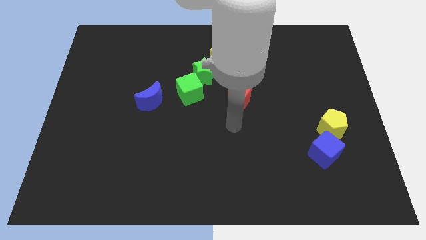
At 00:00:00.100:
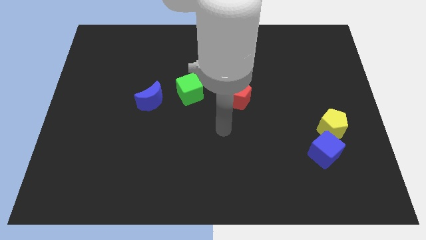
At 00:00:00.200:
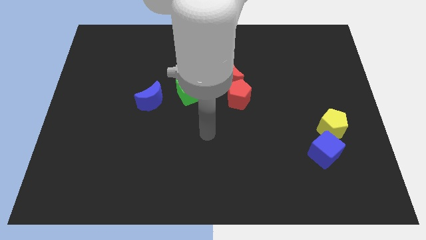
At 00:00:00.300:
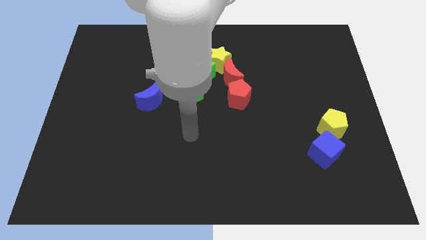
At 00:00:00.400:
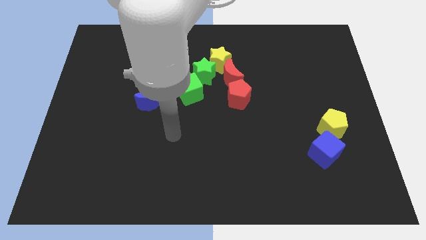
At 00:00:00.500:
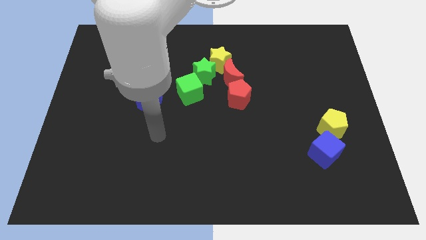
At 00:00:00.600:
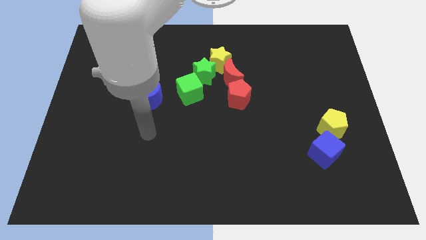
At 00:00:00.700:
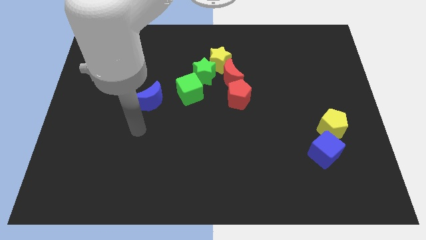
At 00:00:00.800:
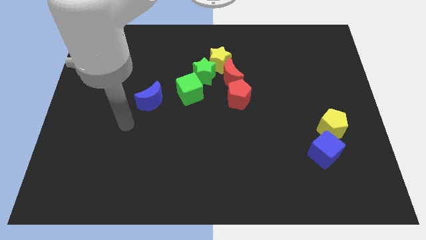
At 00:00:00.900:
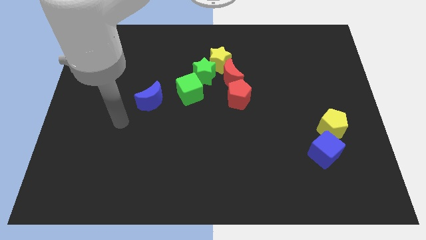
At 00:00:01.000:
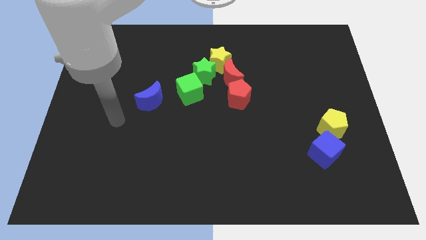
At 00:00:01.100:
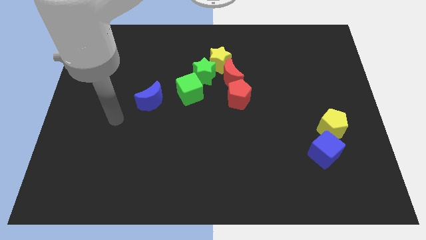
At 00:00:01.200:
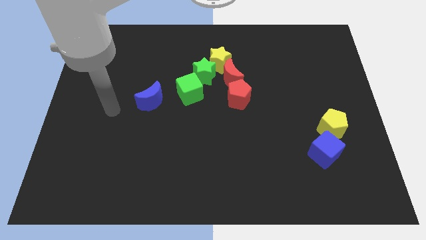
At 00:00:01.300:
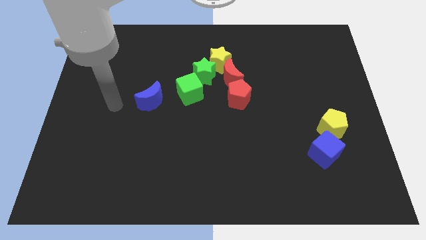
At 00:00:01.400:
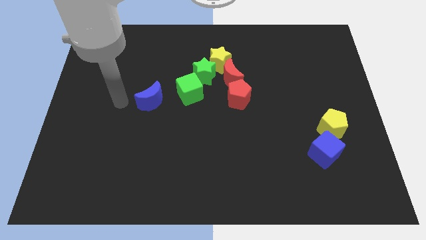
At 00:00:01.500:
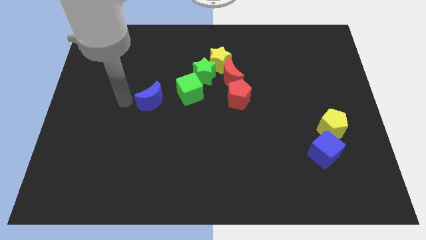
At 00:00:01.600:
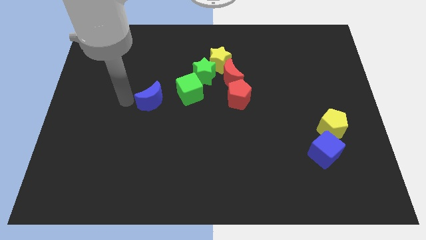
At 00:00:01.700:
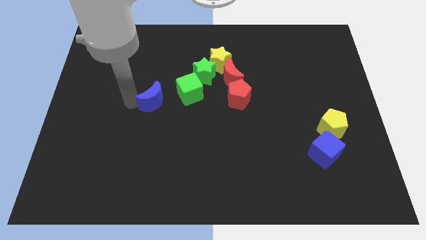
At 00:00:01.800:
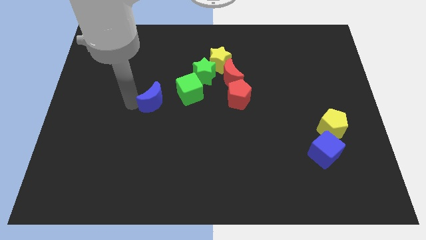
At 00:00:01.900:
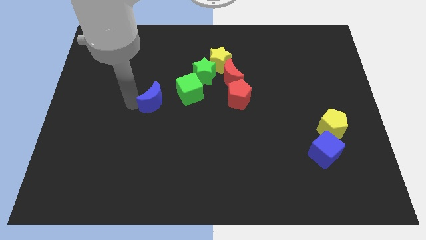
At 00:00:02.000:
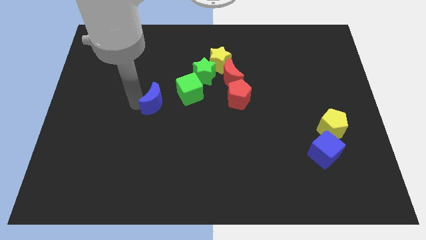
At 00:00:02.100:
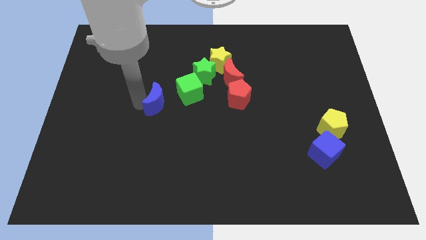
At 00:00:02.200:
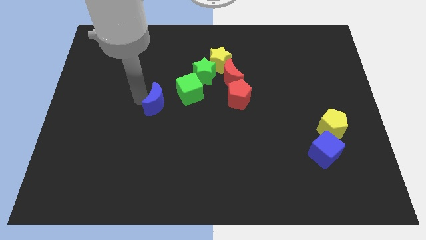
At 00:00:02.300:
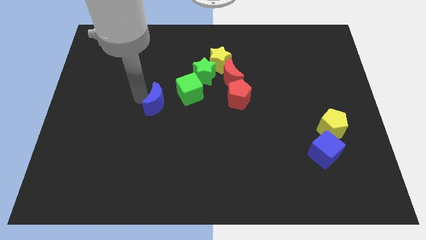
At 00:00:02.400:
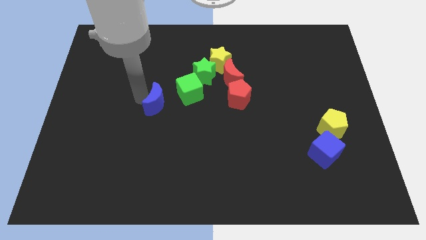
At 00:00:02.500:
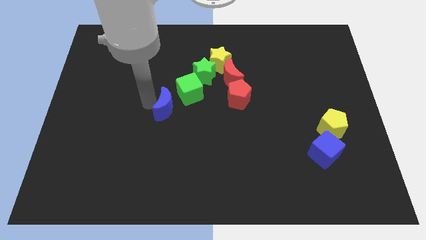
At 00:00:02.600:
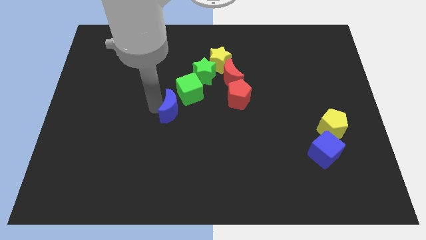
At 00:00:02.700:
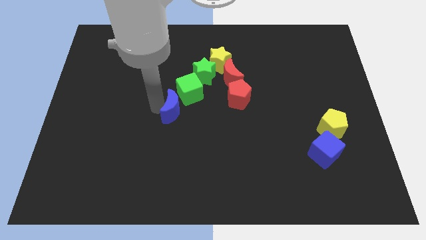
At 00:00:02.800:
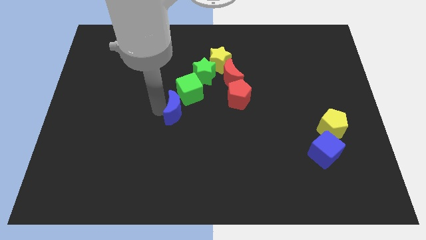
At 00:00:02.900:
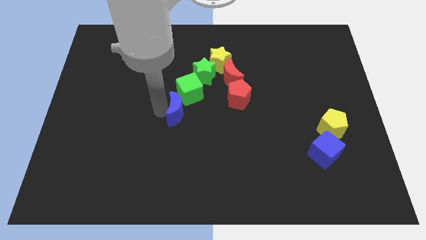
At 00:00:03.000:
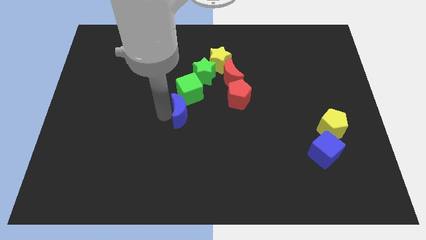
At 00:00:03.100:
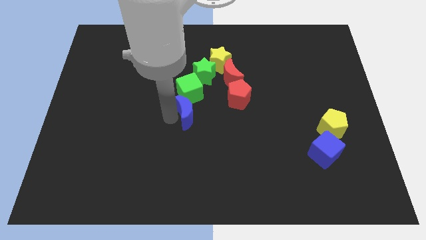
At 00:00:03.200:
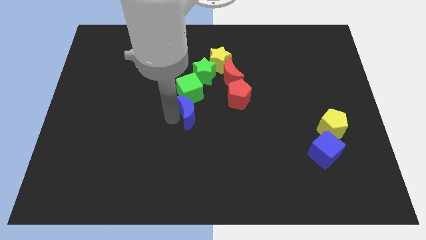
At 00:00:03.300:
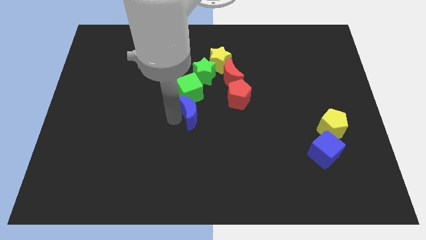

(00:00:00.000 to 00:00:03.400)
move the blue crescent to the bottom of the green cube

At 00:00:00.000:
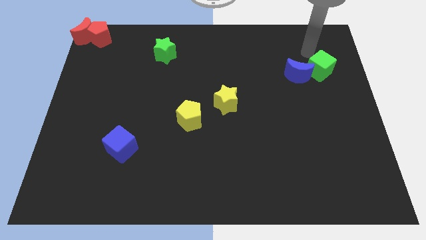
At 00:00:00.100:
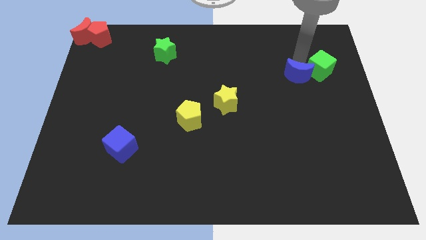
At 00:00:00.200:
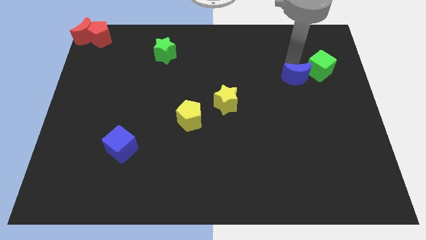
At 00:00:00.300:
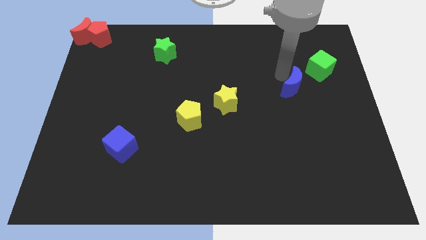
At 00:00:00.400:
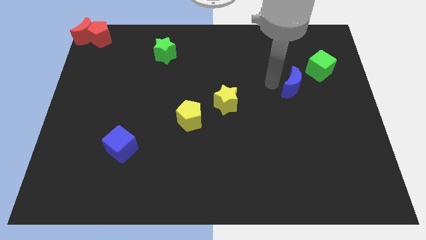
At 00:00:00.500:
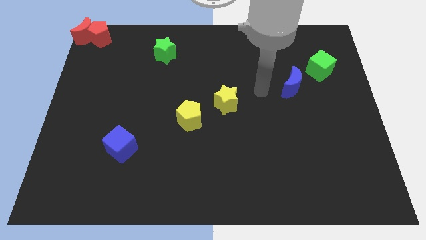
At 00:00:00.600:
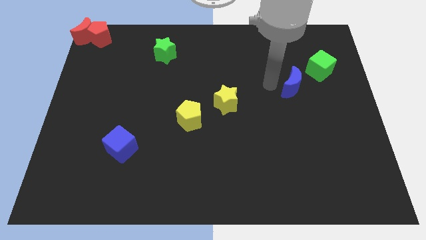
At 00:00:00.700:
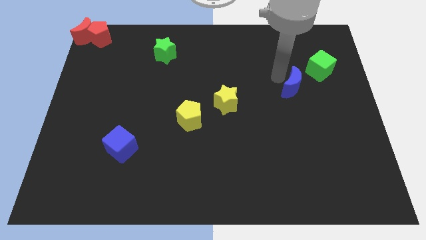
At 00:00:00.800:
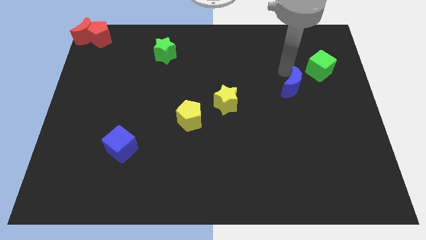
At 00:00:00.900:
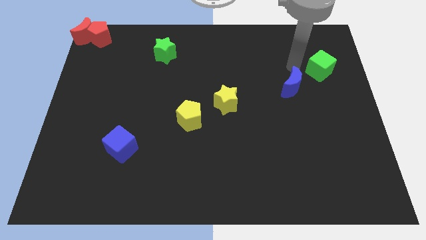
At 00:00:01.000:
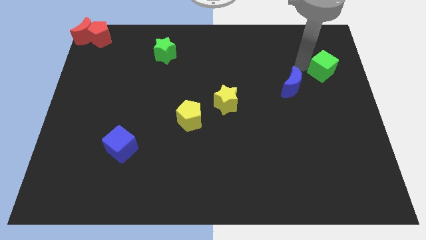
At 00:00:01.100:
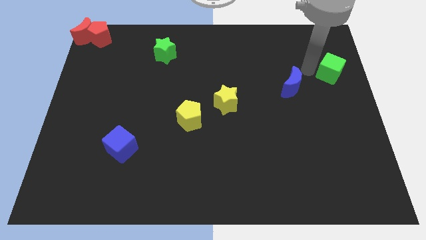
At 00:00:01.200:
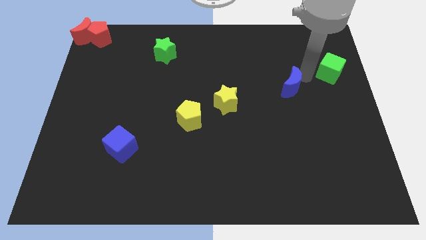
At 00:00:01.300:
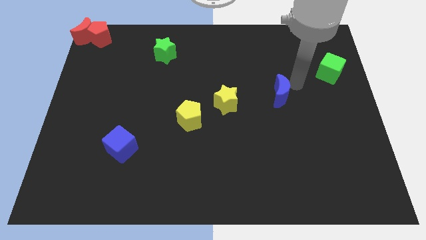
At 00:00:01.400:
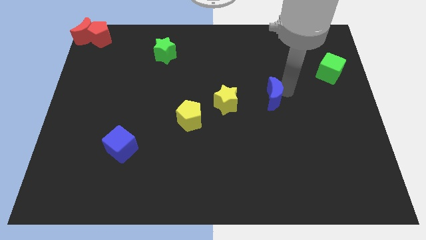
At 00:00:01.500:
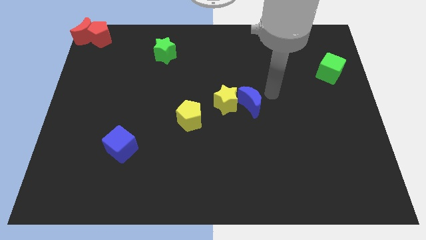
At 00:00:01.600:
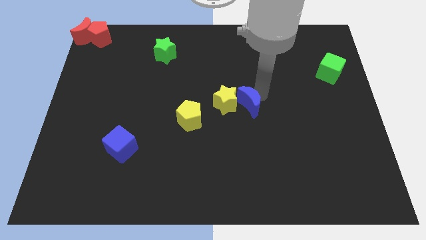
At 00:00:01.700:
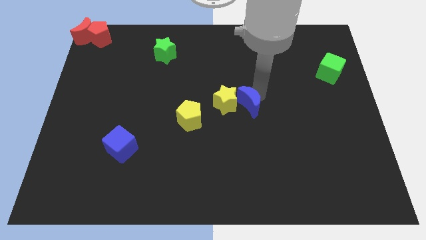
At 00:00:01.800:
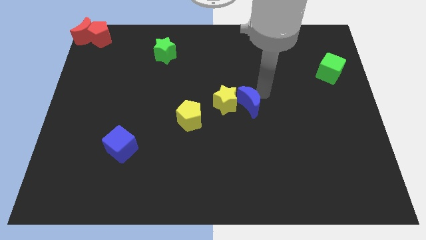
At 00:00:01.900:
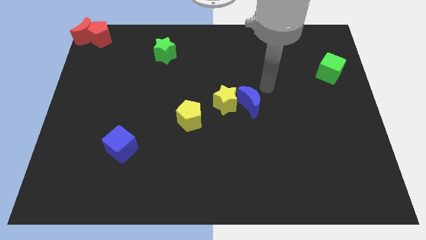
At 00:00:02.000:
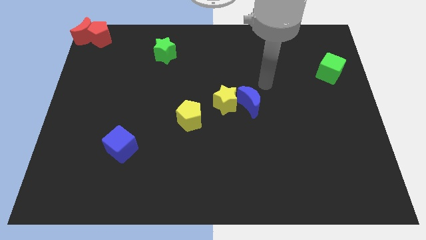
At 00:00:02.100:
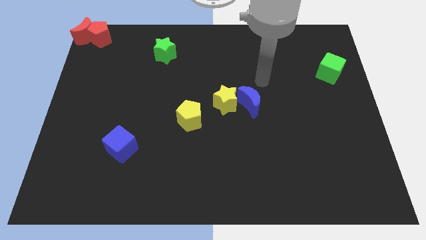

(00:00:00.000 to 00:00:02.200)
move the blue crescent into the right of the yellow star

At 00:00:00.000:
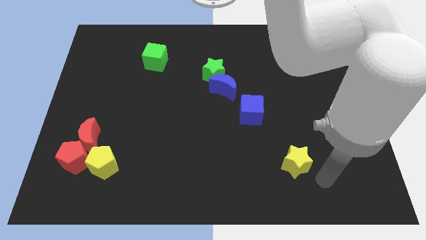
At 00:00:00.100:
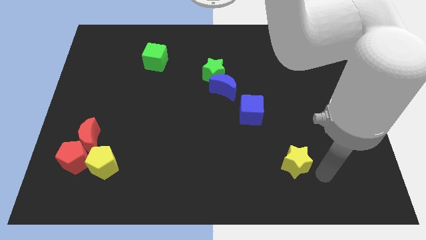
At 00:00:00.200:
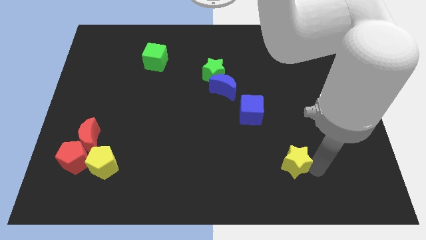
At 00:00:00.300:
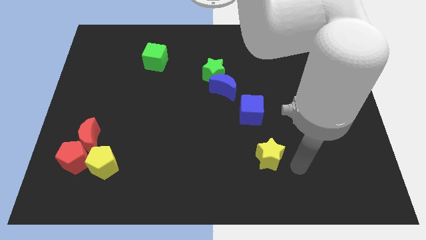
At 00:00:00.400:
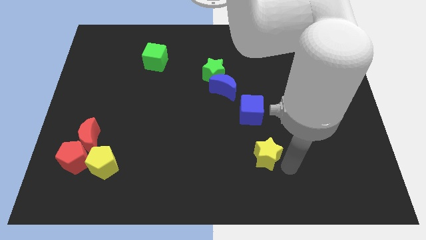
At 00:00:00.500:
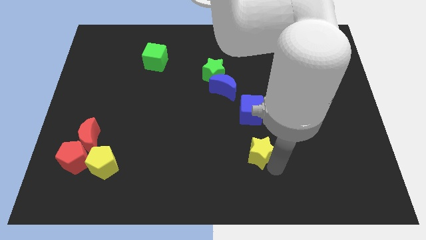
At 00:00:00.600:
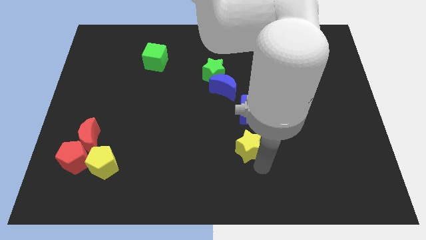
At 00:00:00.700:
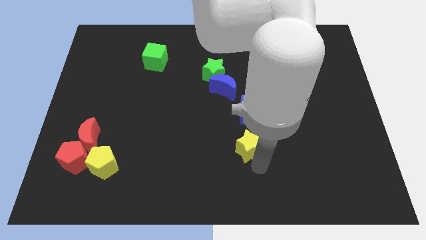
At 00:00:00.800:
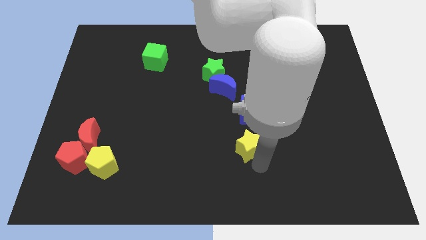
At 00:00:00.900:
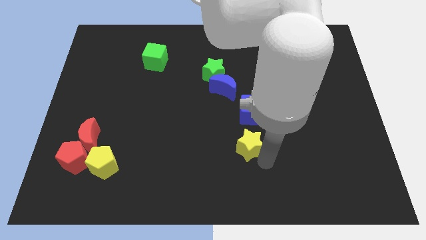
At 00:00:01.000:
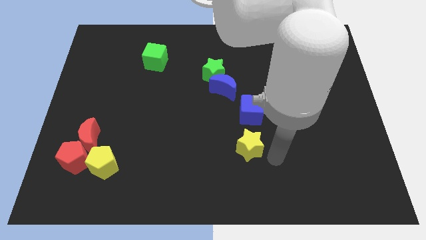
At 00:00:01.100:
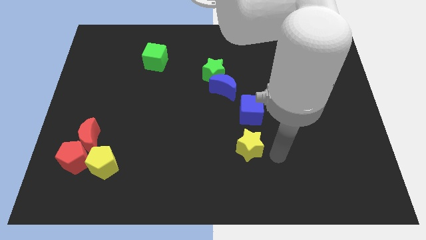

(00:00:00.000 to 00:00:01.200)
push the yellow star near the bottom to the blue cube

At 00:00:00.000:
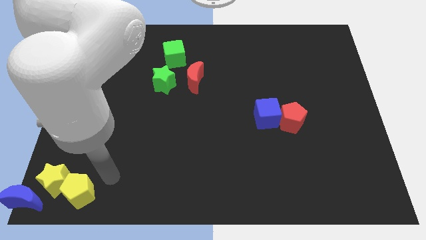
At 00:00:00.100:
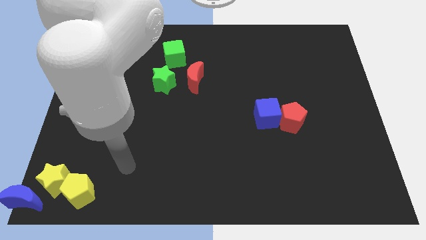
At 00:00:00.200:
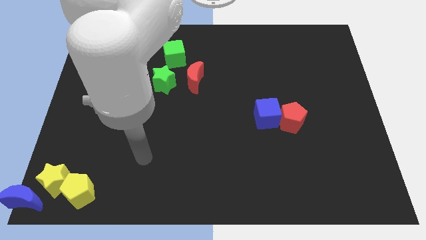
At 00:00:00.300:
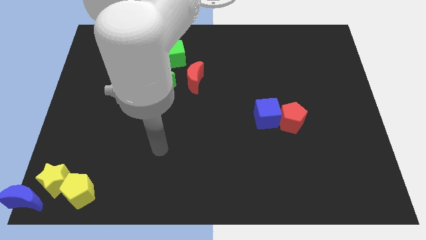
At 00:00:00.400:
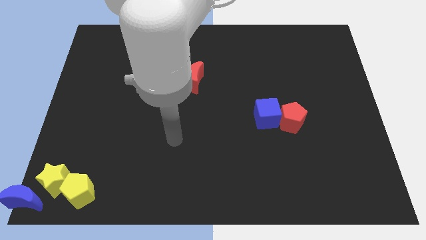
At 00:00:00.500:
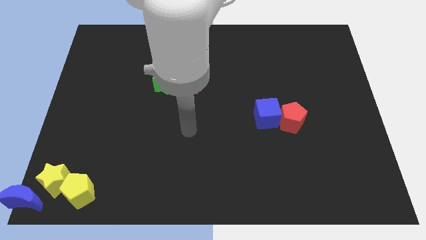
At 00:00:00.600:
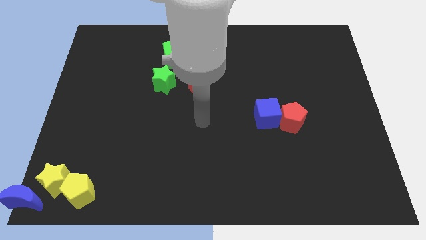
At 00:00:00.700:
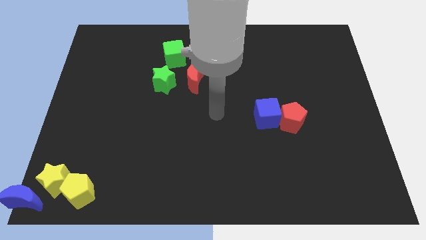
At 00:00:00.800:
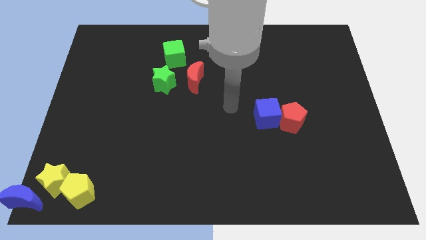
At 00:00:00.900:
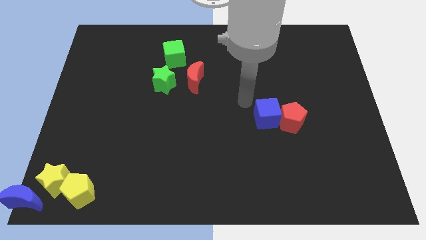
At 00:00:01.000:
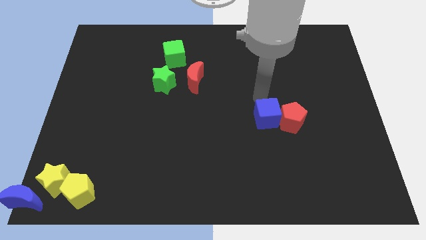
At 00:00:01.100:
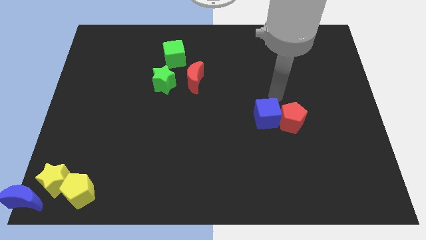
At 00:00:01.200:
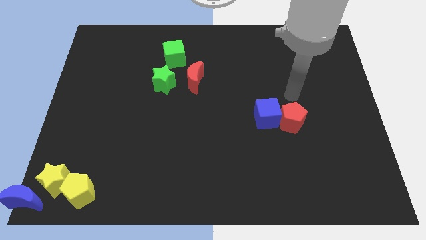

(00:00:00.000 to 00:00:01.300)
move arm above blue cube

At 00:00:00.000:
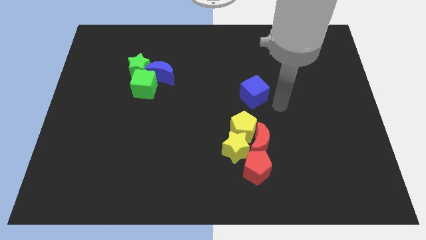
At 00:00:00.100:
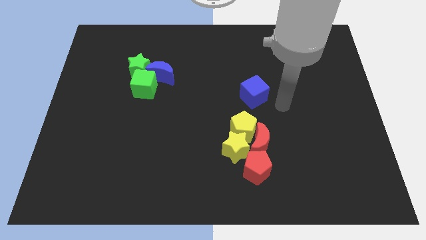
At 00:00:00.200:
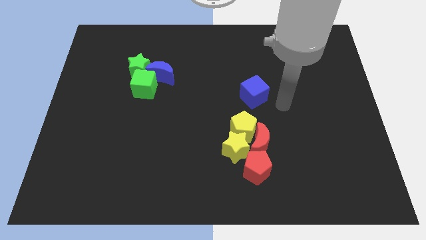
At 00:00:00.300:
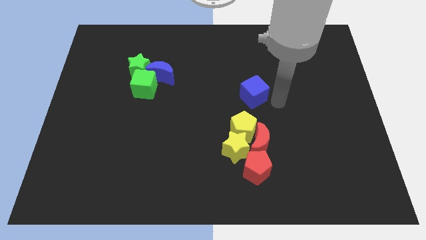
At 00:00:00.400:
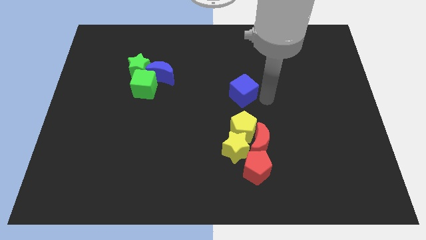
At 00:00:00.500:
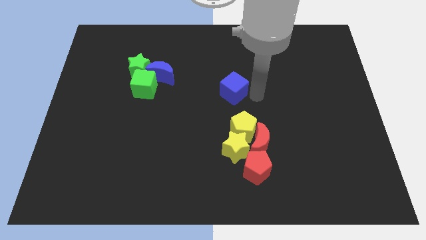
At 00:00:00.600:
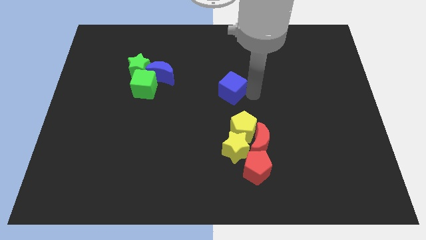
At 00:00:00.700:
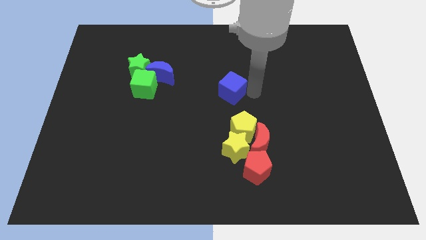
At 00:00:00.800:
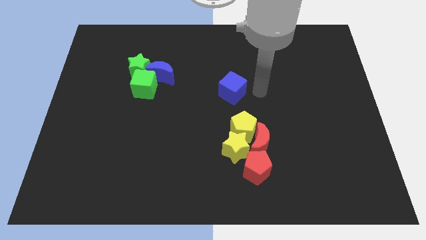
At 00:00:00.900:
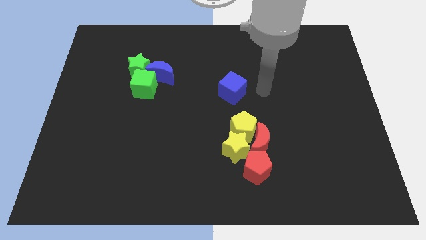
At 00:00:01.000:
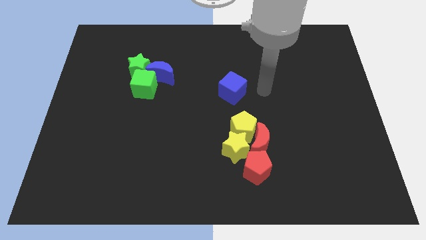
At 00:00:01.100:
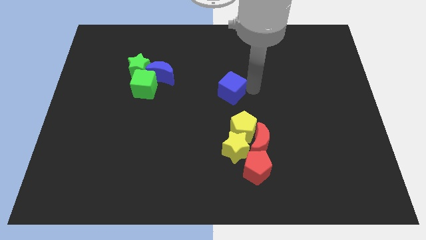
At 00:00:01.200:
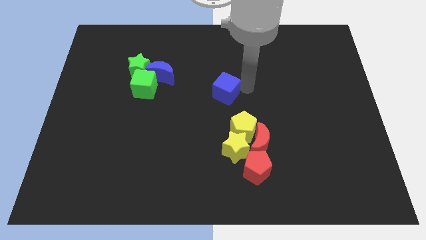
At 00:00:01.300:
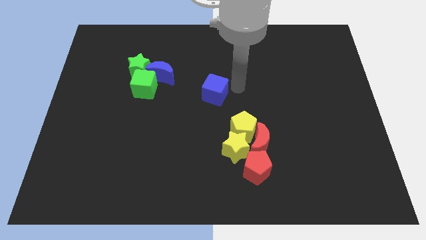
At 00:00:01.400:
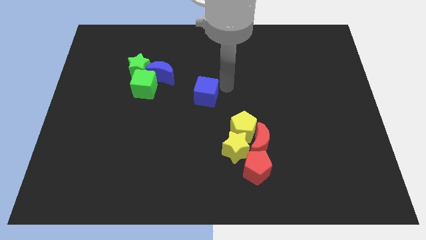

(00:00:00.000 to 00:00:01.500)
move yellow pentagon slightly to the left
